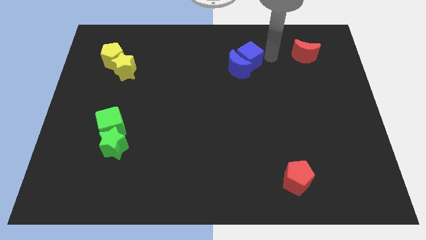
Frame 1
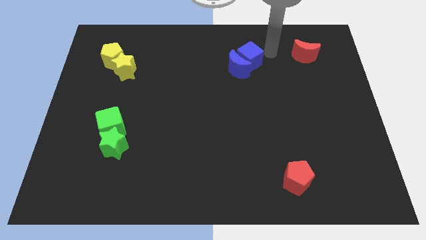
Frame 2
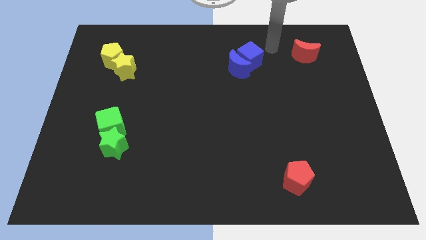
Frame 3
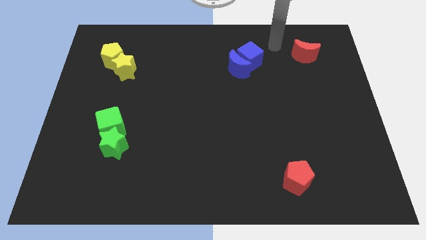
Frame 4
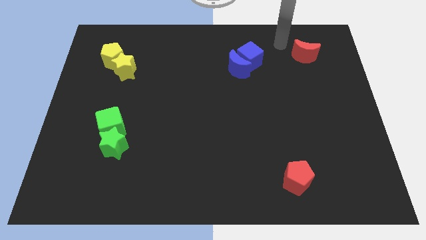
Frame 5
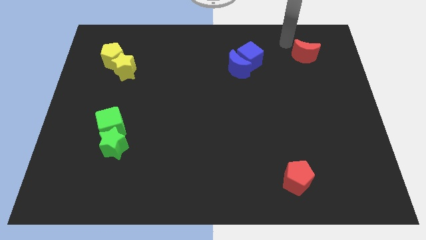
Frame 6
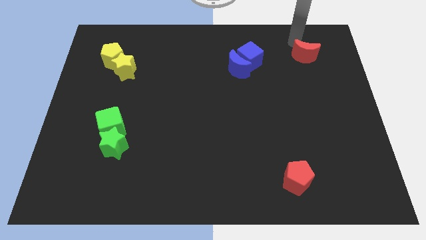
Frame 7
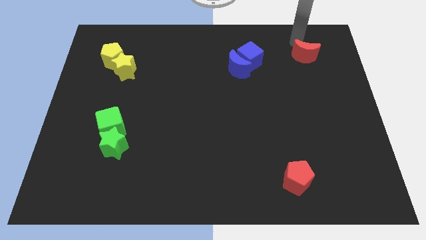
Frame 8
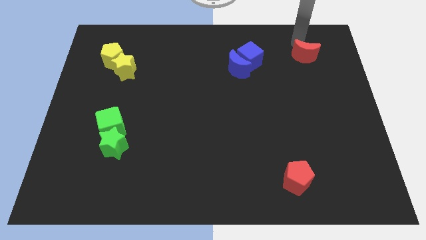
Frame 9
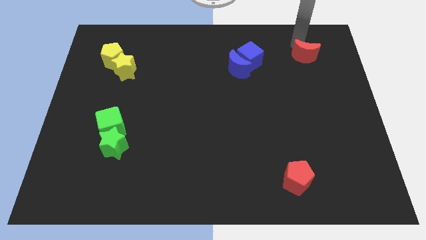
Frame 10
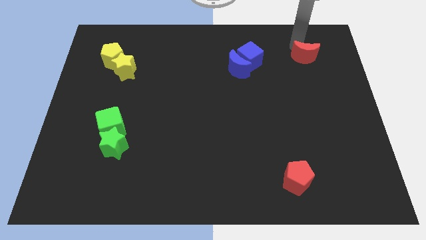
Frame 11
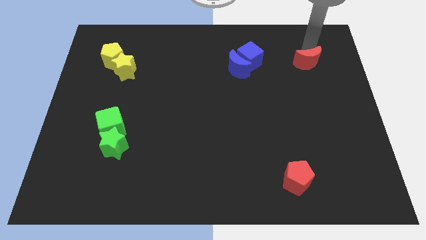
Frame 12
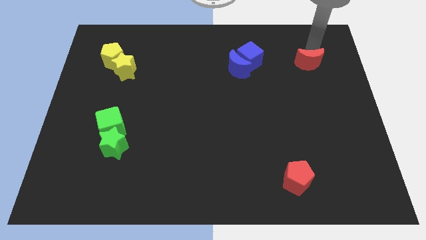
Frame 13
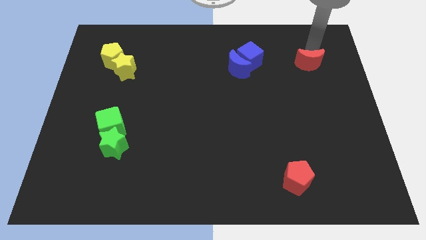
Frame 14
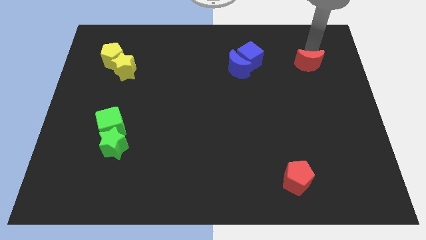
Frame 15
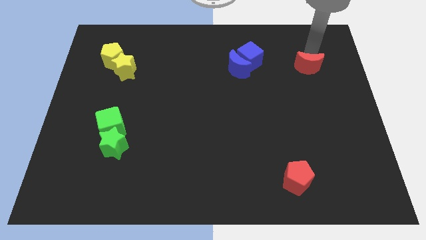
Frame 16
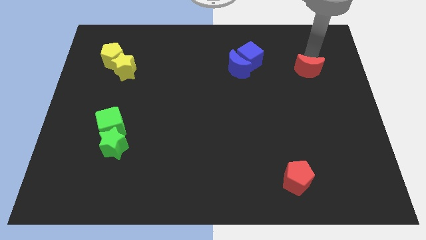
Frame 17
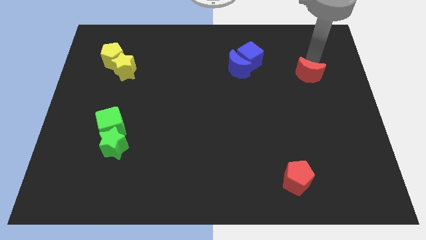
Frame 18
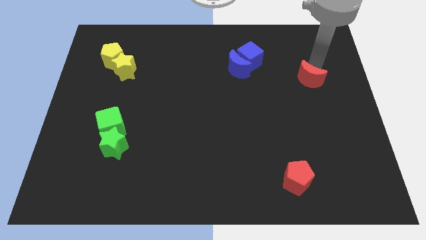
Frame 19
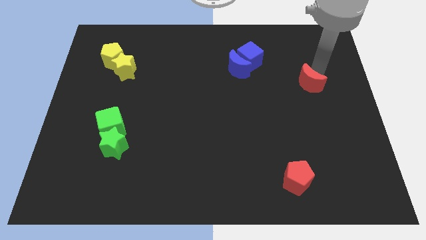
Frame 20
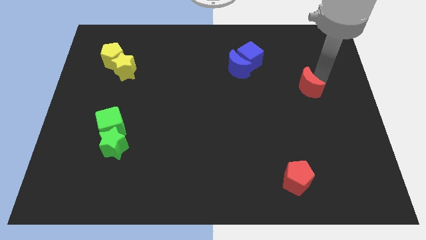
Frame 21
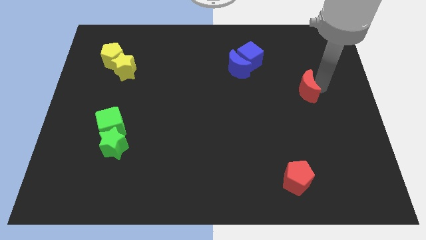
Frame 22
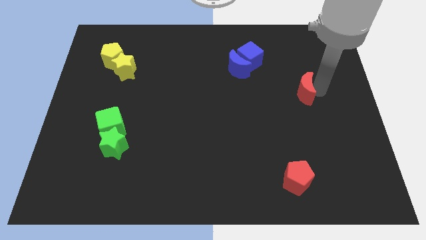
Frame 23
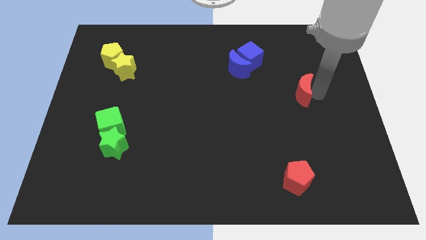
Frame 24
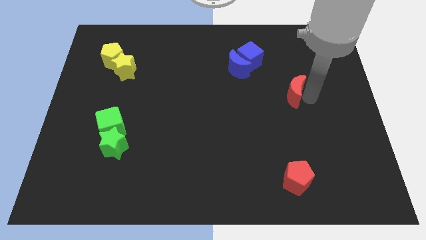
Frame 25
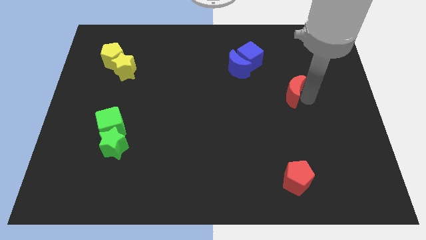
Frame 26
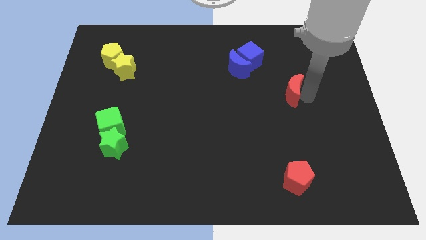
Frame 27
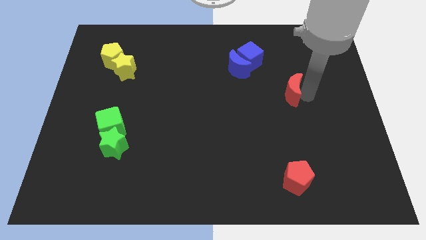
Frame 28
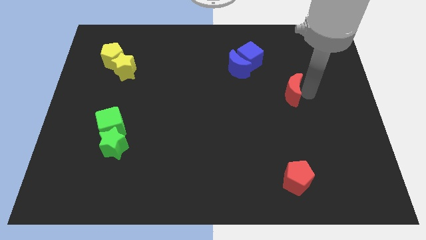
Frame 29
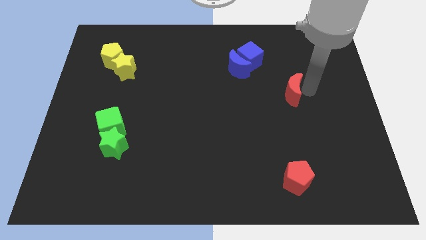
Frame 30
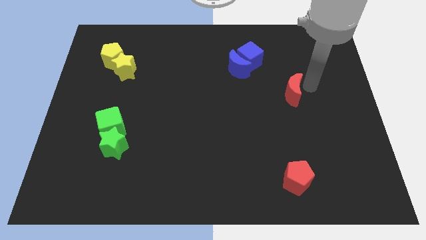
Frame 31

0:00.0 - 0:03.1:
slightly move the red moon towards down

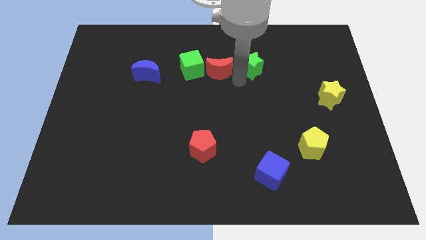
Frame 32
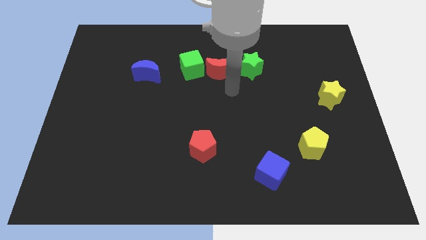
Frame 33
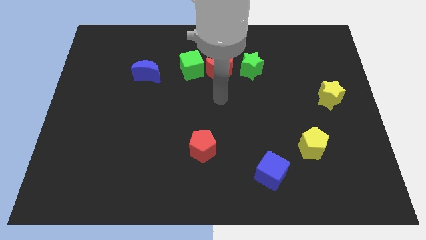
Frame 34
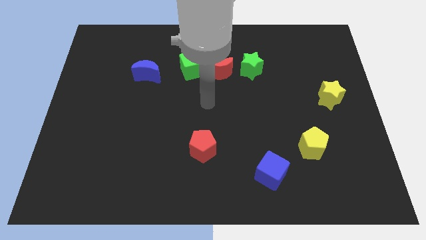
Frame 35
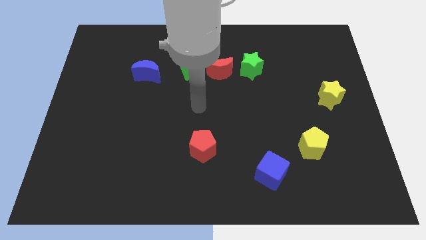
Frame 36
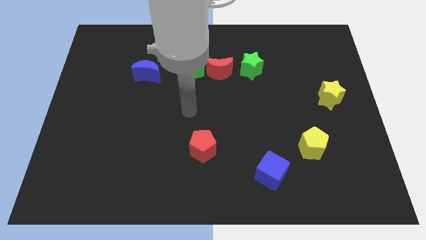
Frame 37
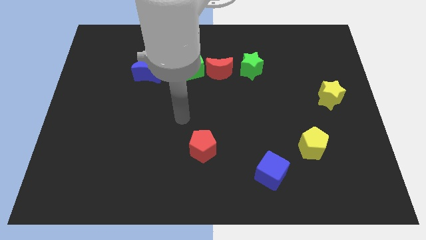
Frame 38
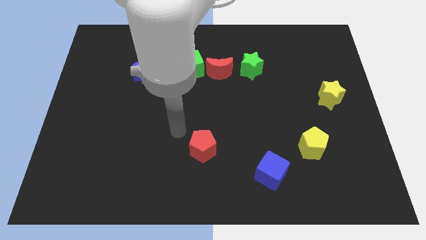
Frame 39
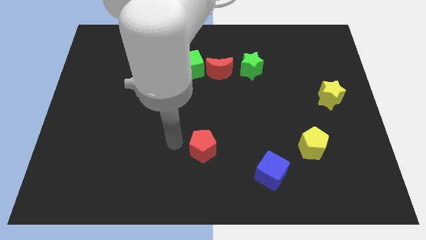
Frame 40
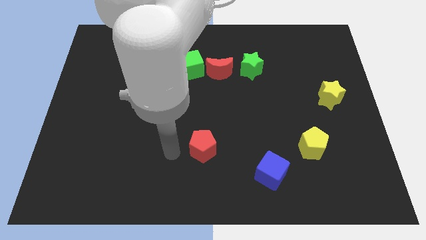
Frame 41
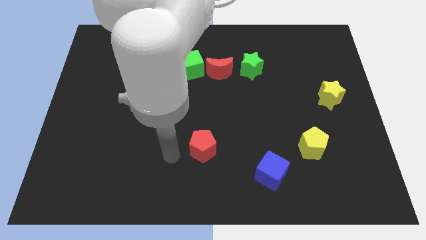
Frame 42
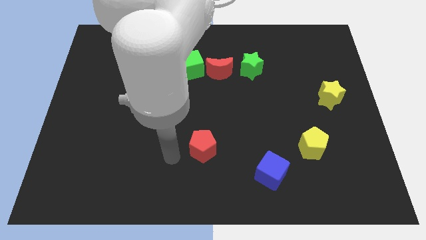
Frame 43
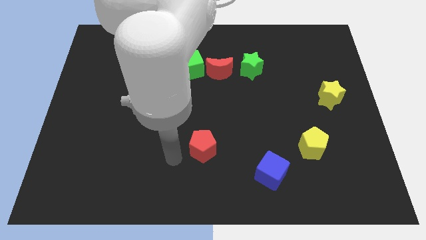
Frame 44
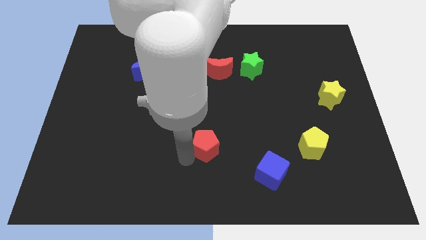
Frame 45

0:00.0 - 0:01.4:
move your arm away from the green star

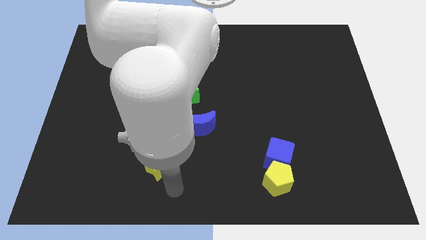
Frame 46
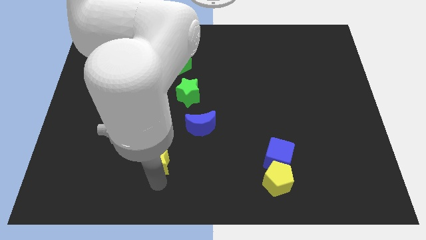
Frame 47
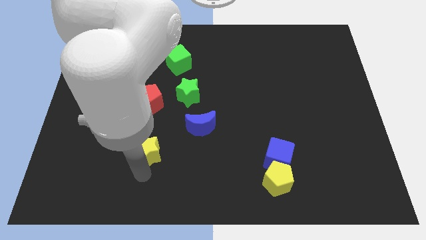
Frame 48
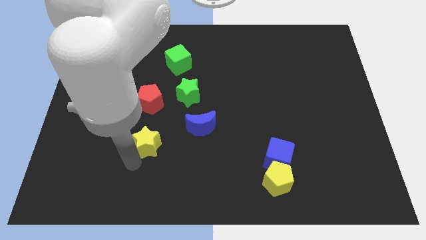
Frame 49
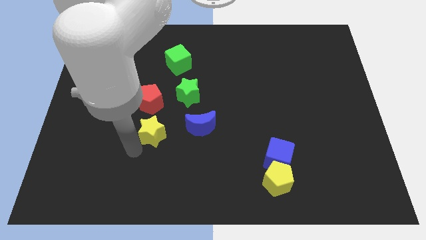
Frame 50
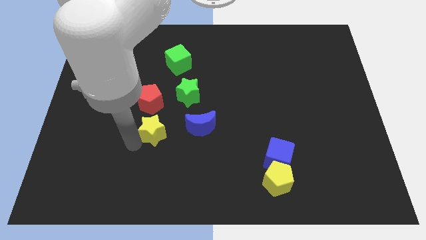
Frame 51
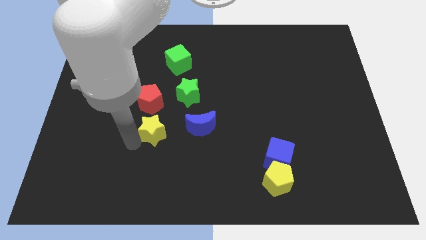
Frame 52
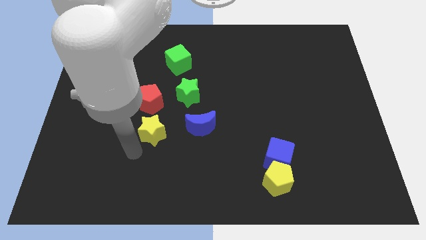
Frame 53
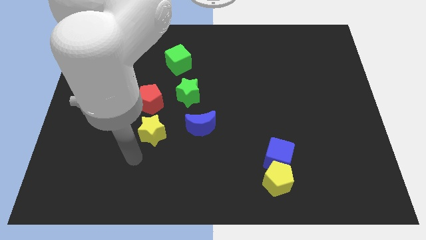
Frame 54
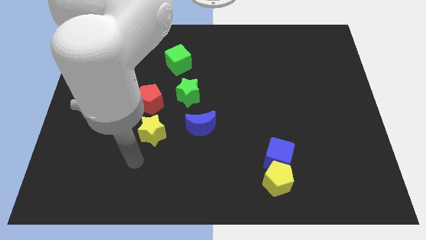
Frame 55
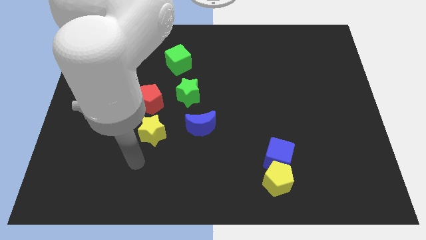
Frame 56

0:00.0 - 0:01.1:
push yellow star towards red pentagon

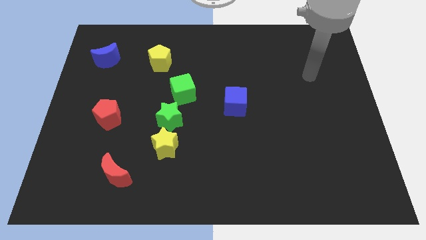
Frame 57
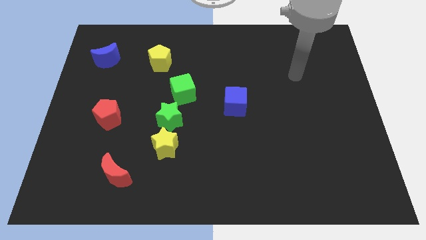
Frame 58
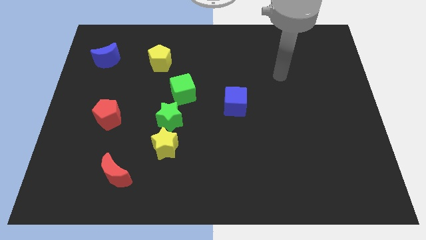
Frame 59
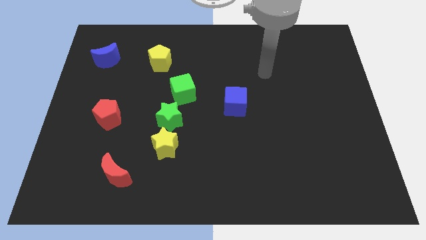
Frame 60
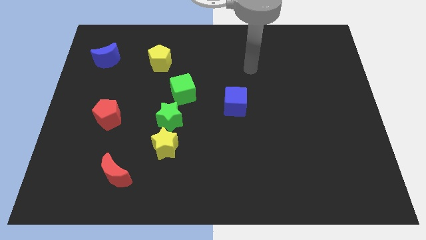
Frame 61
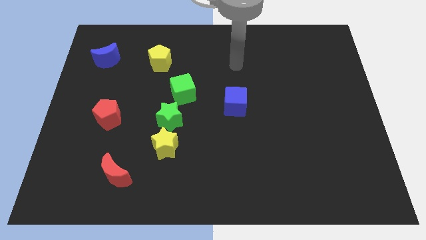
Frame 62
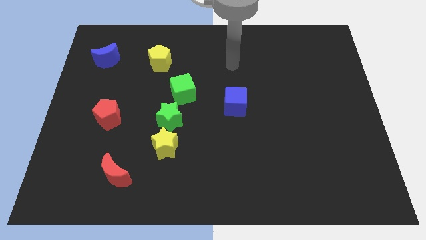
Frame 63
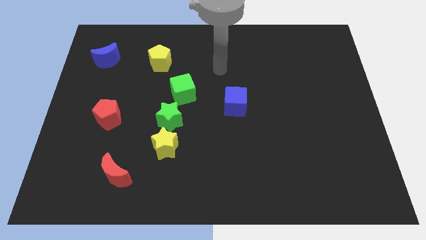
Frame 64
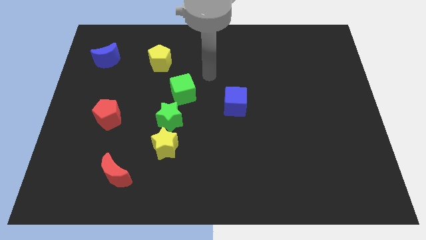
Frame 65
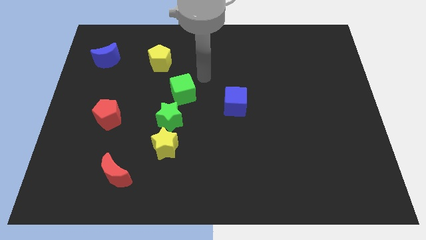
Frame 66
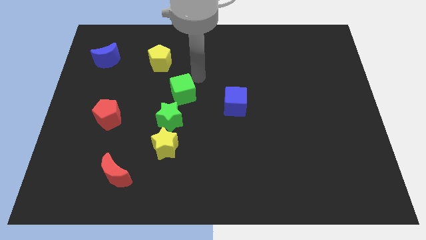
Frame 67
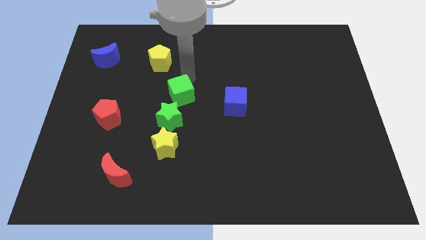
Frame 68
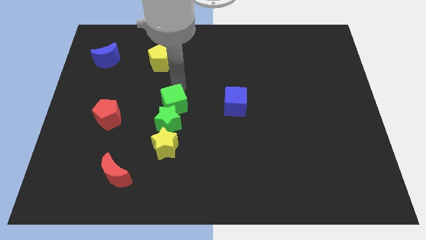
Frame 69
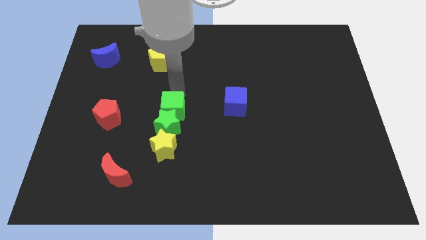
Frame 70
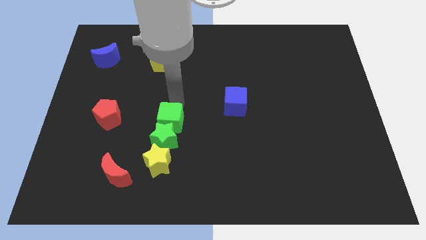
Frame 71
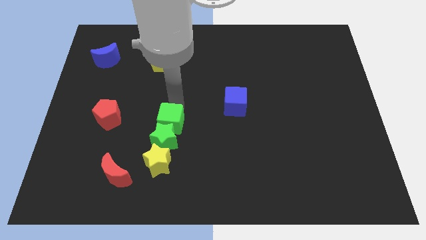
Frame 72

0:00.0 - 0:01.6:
move the green cube into green star

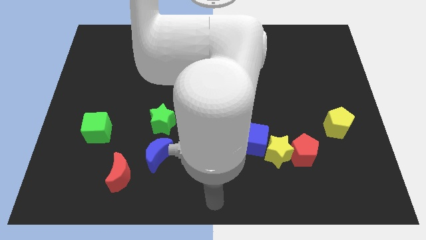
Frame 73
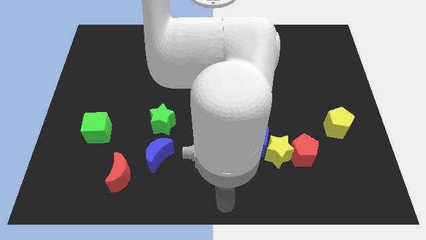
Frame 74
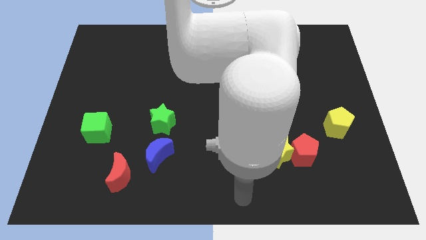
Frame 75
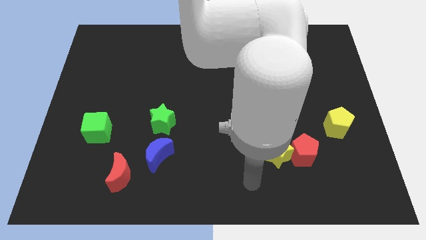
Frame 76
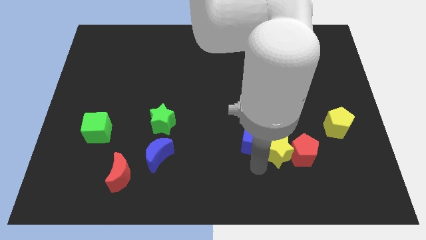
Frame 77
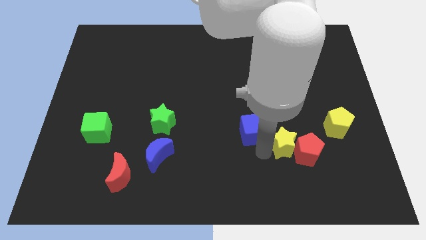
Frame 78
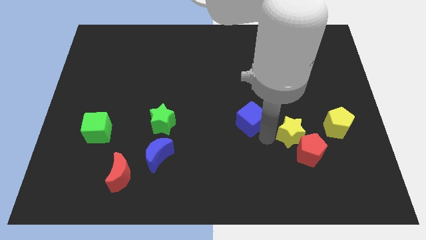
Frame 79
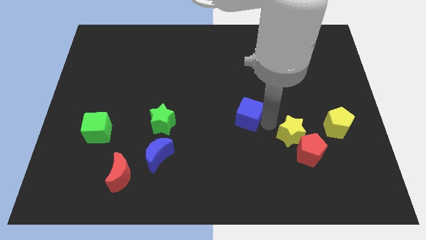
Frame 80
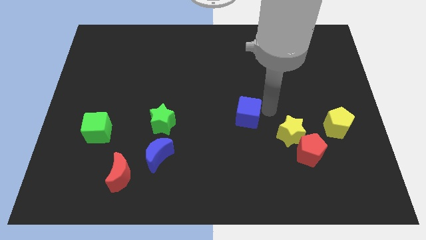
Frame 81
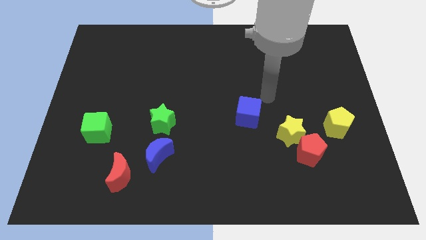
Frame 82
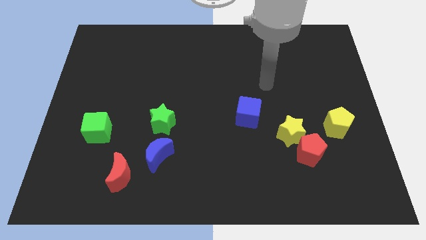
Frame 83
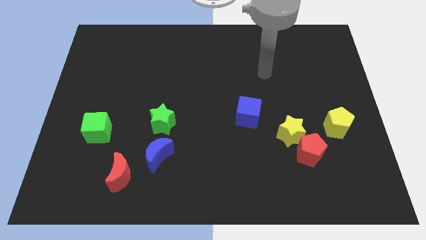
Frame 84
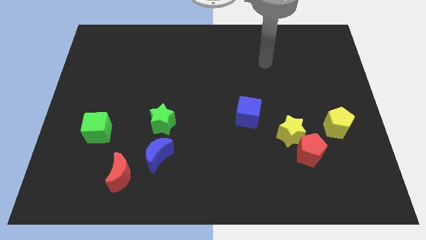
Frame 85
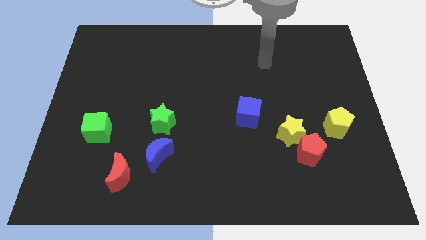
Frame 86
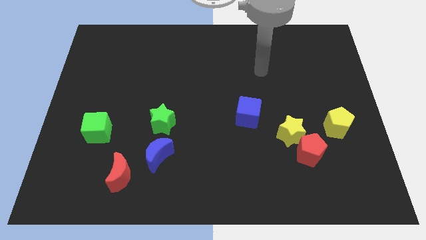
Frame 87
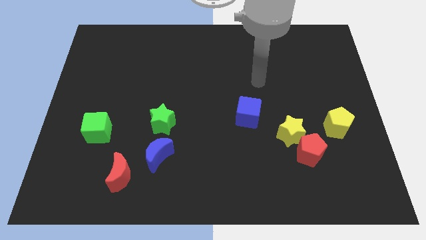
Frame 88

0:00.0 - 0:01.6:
separate the blue cube from the yellow star

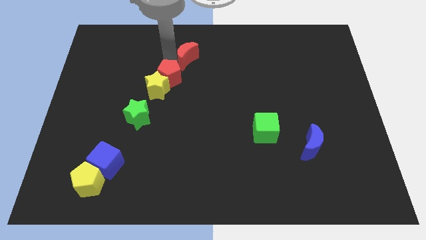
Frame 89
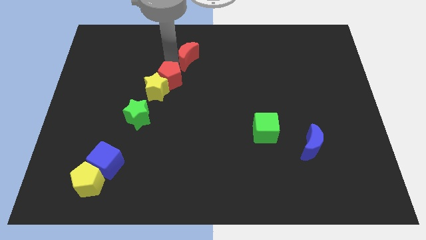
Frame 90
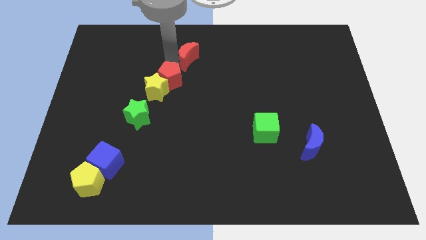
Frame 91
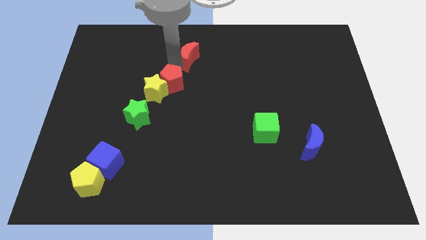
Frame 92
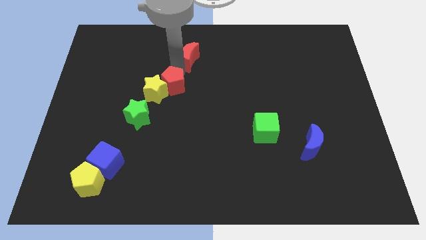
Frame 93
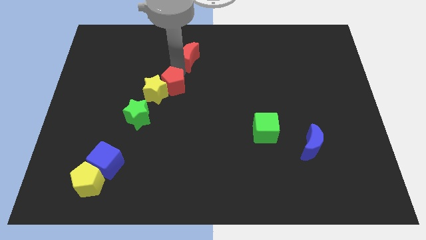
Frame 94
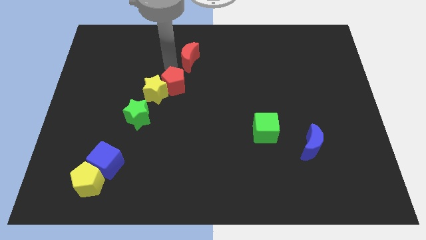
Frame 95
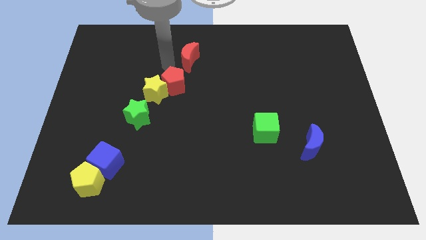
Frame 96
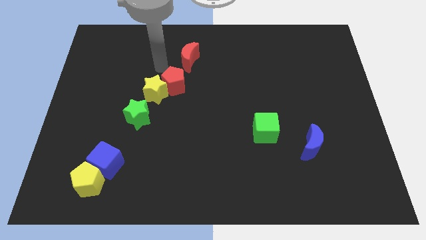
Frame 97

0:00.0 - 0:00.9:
separate red pentagon from red moon
